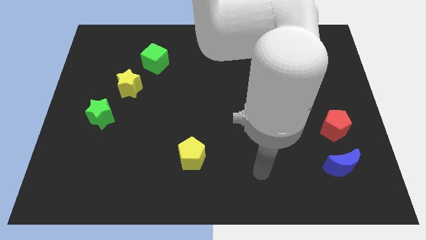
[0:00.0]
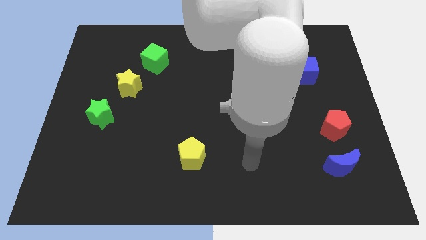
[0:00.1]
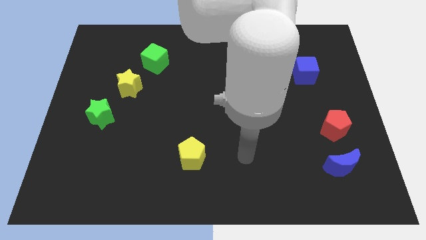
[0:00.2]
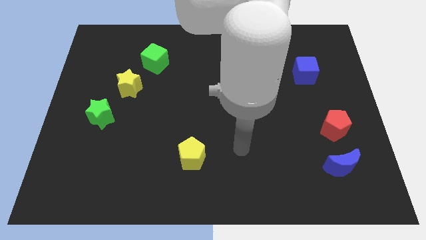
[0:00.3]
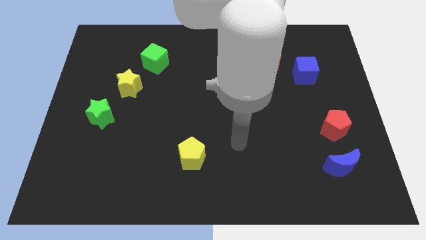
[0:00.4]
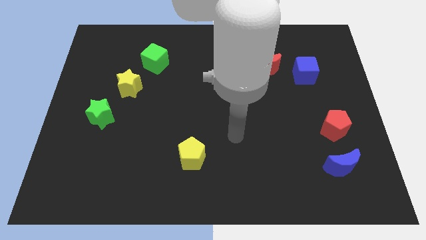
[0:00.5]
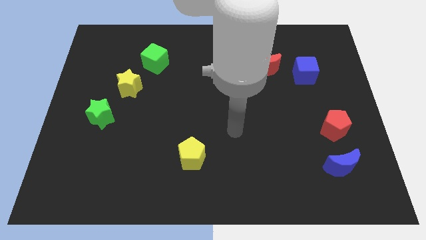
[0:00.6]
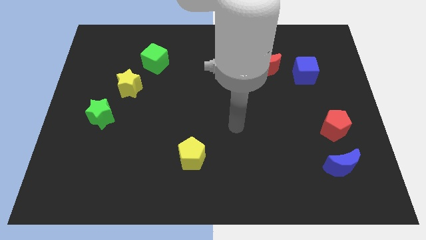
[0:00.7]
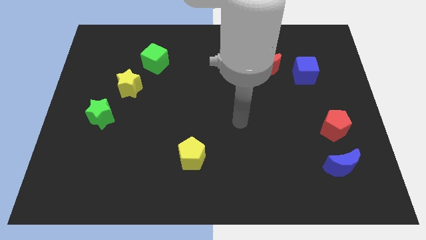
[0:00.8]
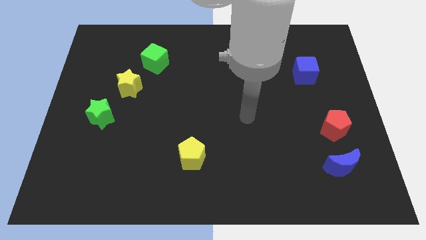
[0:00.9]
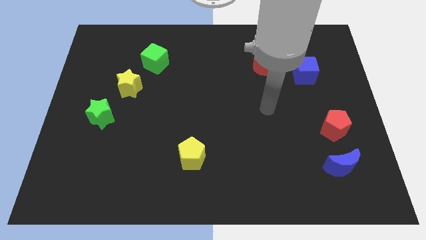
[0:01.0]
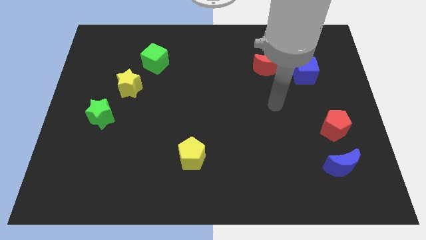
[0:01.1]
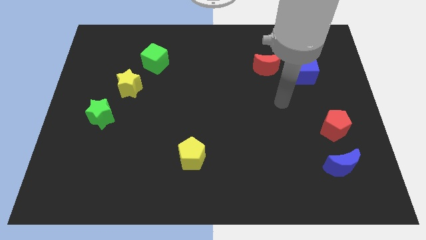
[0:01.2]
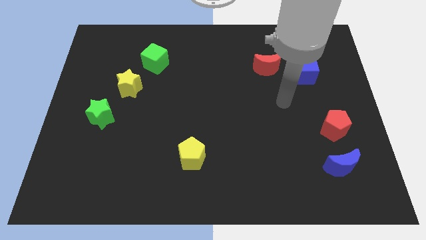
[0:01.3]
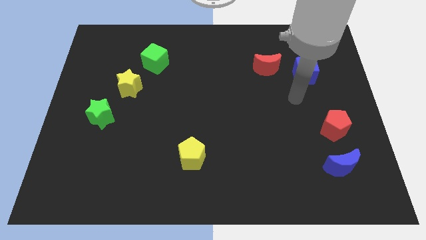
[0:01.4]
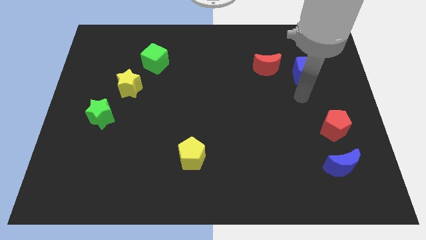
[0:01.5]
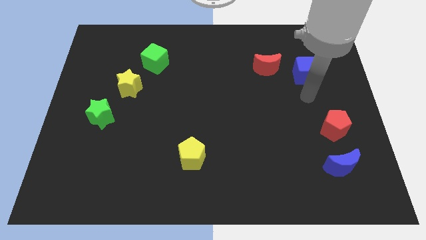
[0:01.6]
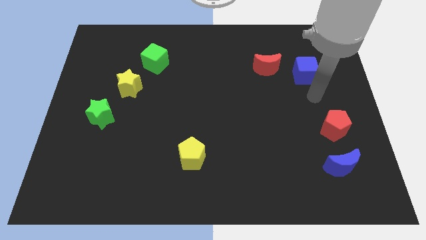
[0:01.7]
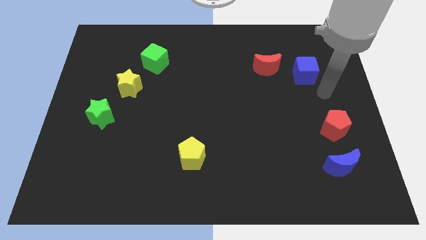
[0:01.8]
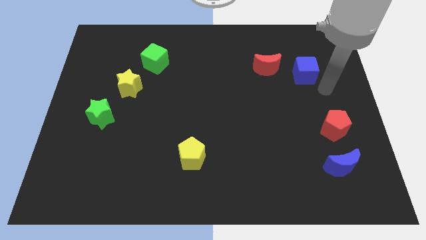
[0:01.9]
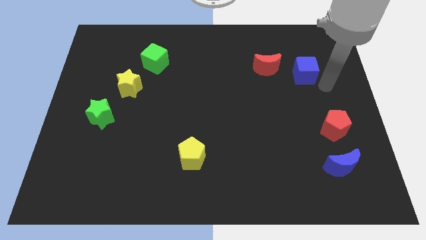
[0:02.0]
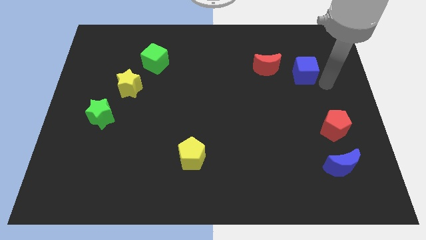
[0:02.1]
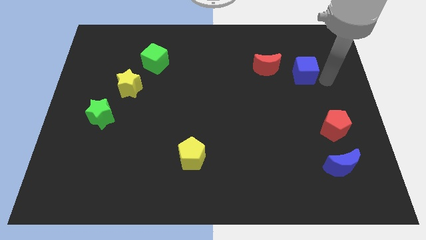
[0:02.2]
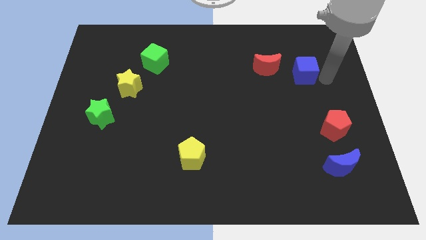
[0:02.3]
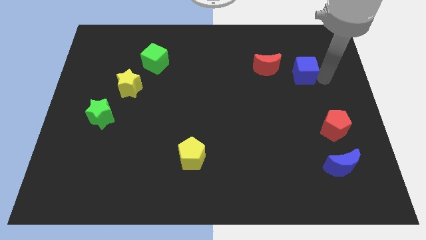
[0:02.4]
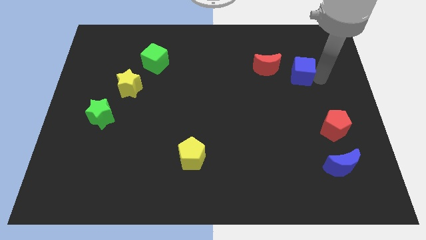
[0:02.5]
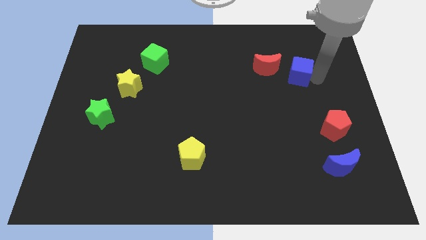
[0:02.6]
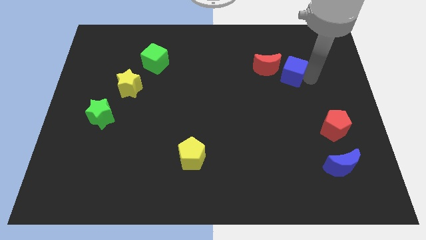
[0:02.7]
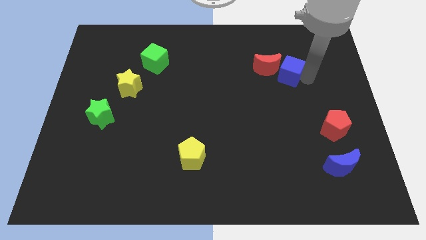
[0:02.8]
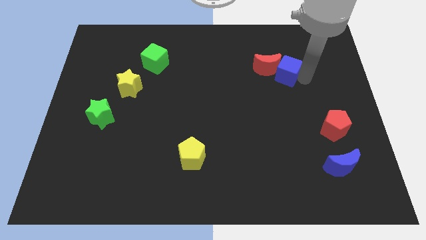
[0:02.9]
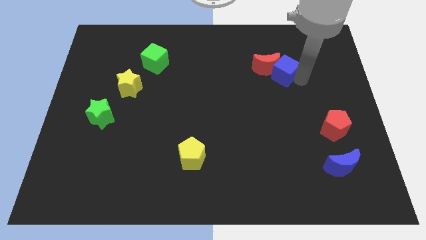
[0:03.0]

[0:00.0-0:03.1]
move the blue cube to the red moon

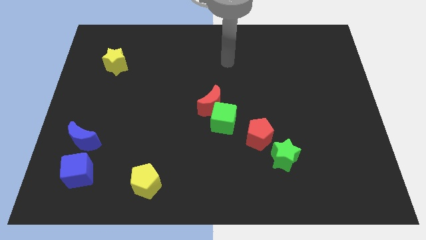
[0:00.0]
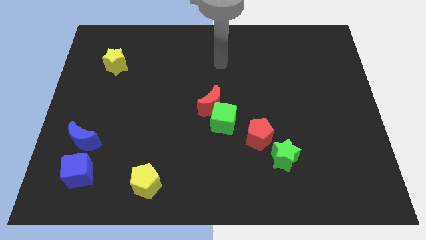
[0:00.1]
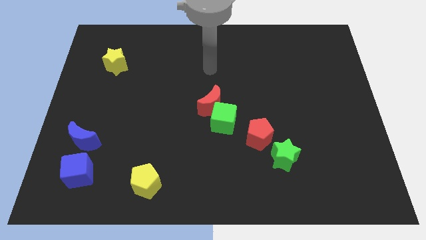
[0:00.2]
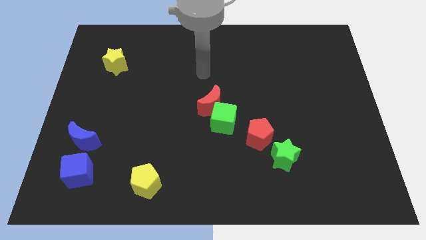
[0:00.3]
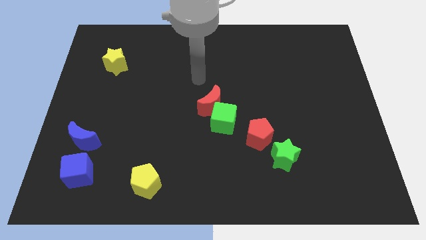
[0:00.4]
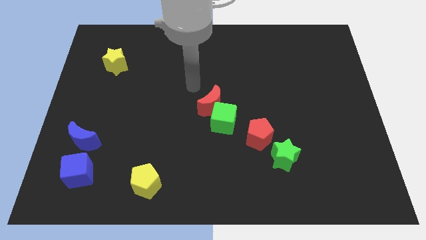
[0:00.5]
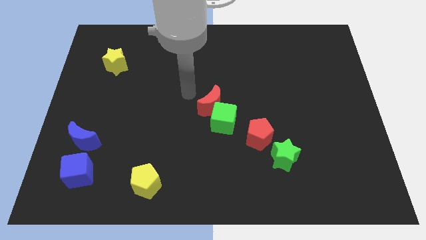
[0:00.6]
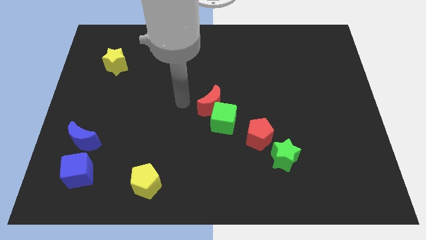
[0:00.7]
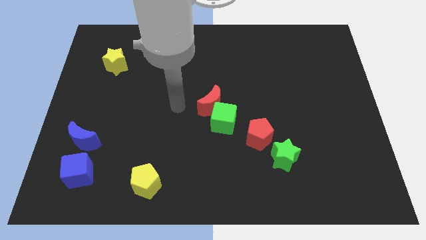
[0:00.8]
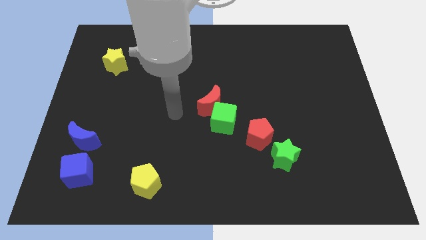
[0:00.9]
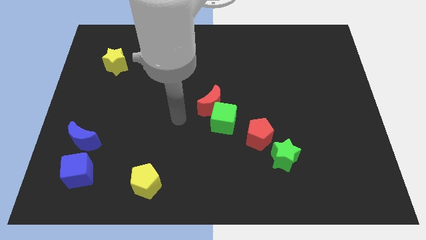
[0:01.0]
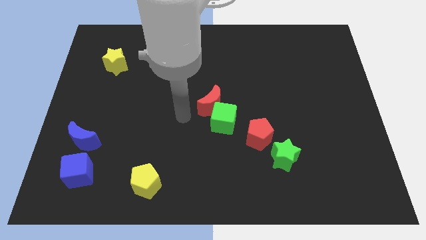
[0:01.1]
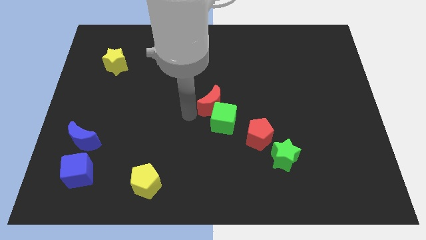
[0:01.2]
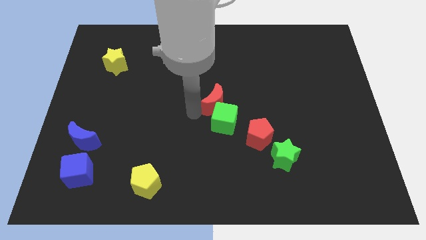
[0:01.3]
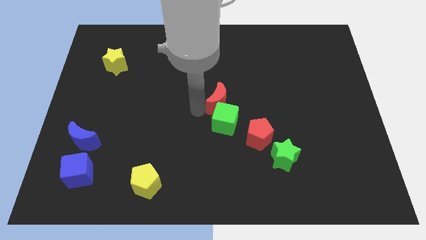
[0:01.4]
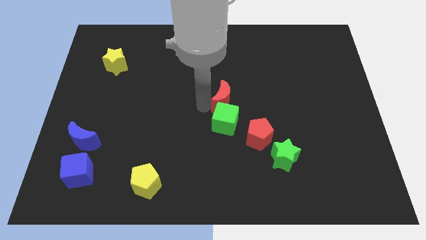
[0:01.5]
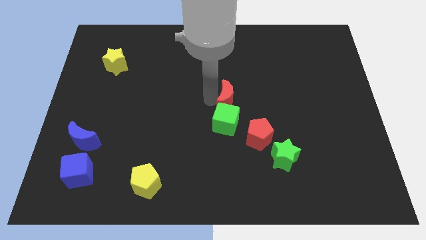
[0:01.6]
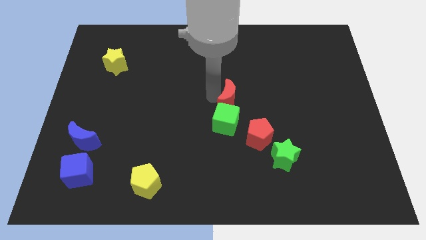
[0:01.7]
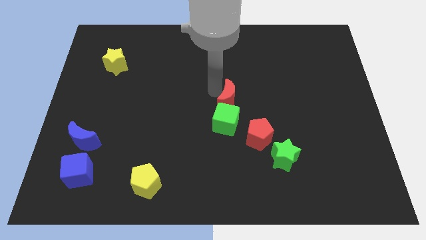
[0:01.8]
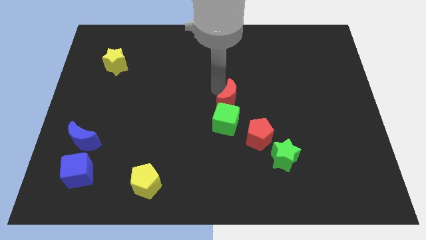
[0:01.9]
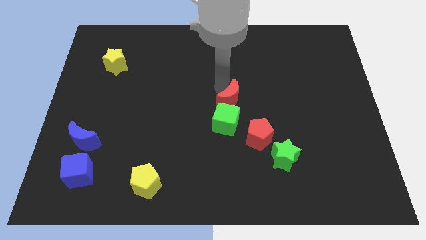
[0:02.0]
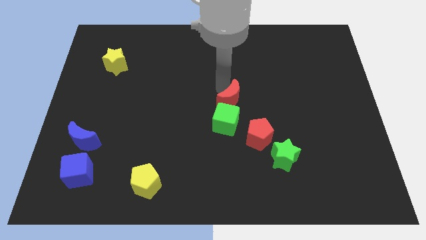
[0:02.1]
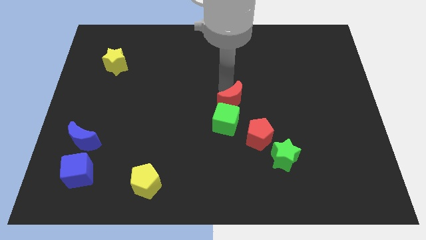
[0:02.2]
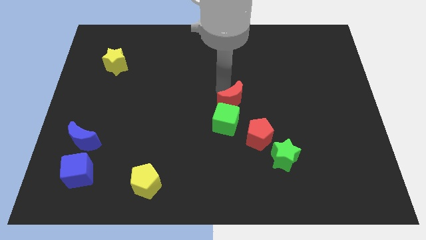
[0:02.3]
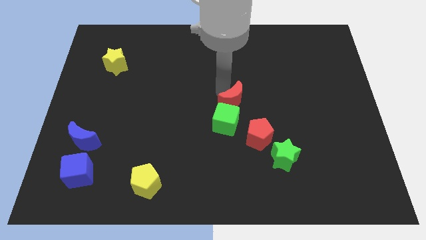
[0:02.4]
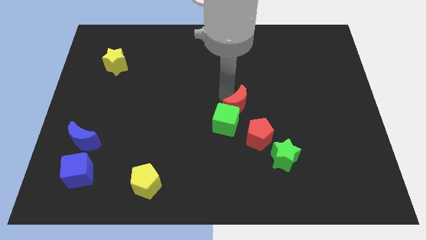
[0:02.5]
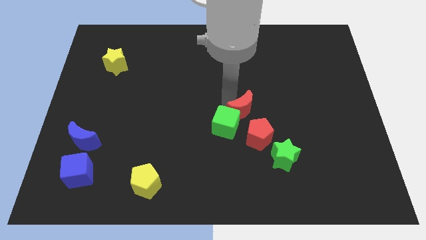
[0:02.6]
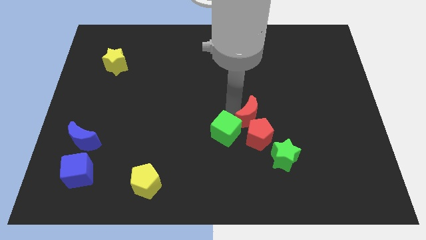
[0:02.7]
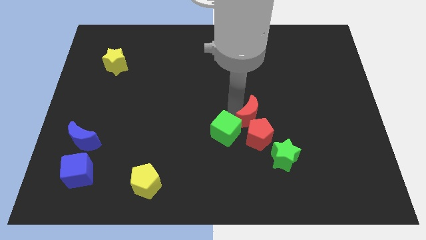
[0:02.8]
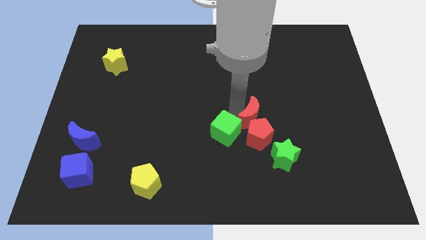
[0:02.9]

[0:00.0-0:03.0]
put the red moon next to the red pentagon

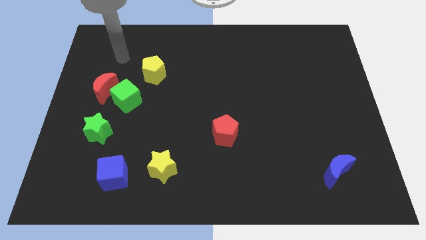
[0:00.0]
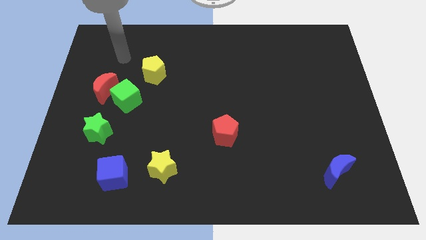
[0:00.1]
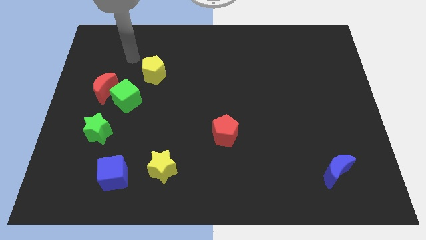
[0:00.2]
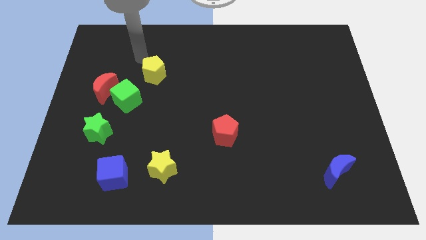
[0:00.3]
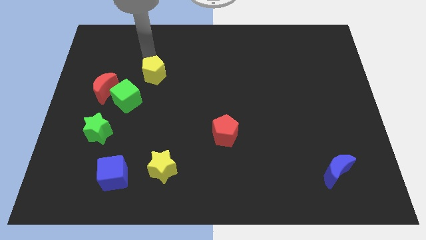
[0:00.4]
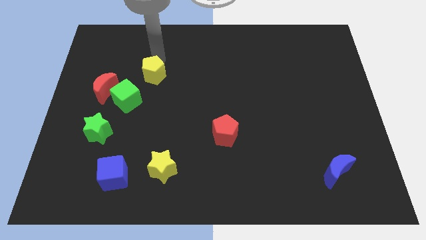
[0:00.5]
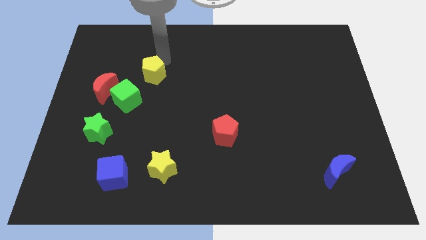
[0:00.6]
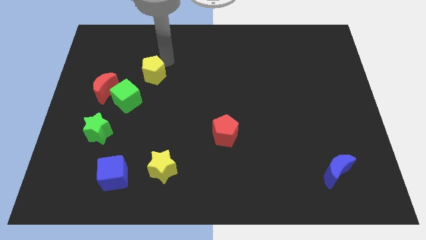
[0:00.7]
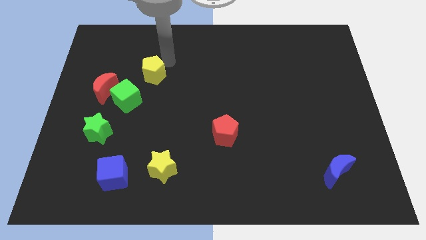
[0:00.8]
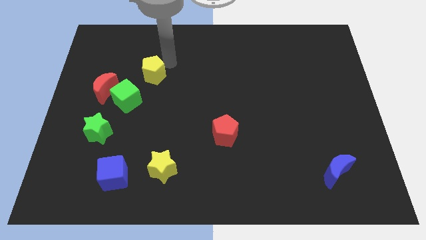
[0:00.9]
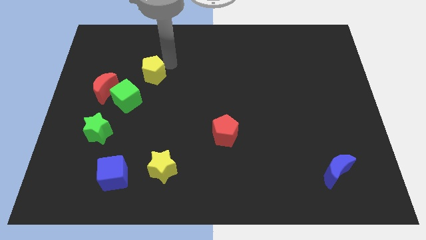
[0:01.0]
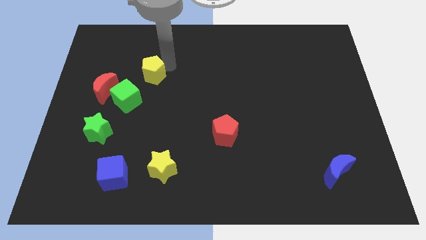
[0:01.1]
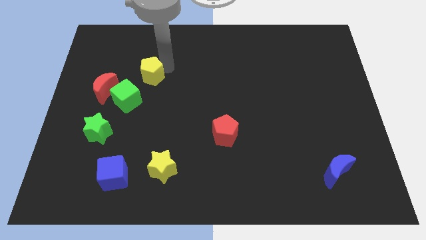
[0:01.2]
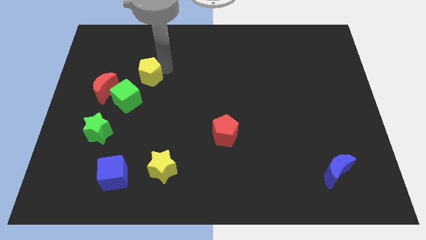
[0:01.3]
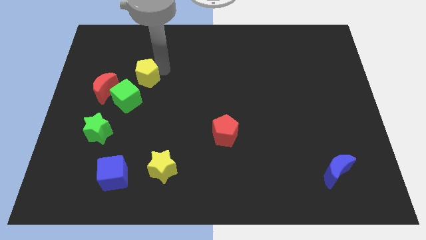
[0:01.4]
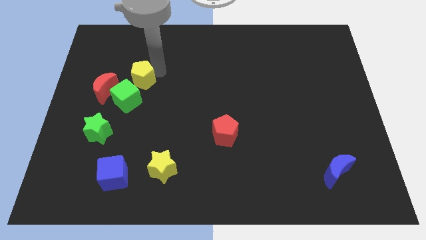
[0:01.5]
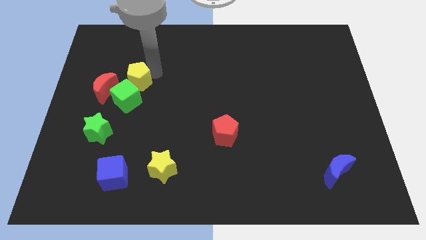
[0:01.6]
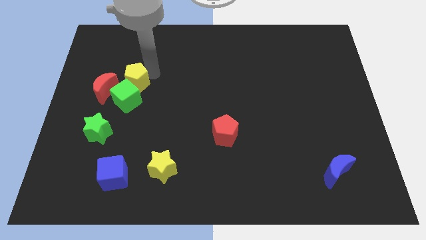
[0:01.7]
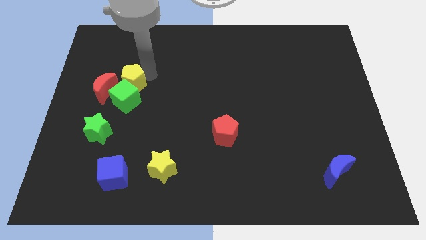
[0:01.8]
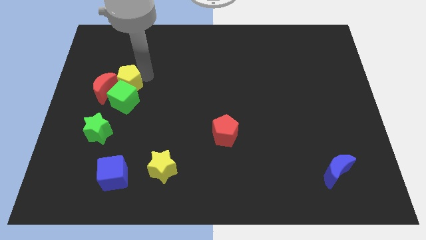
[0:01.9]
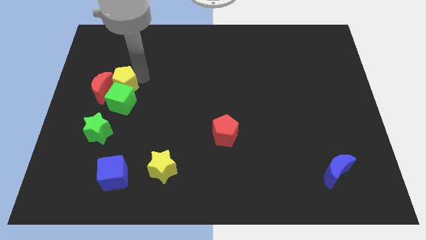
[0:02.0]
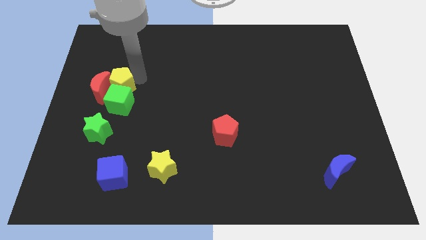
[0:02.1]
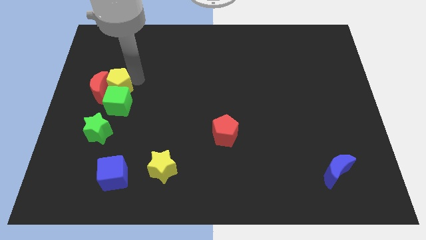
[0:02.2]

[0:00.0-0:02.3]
push the yellow pentagon to the red moon
